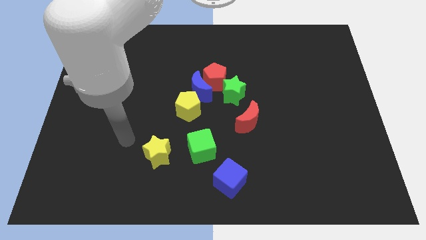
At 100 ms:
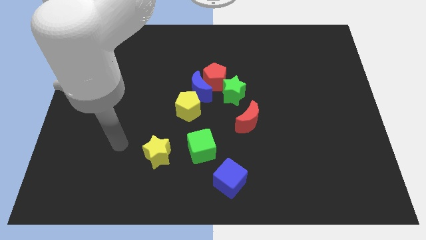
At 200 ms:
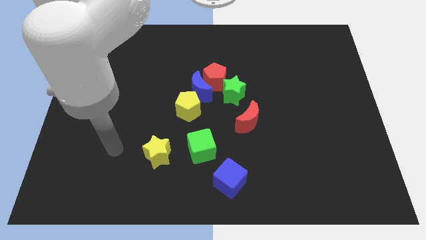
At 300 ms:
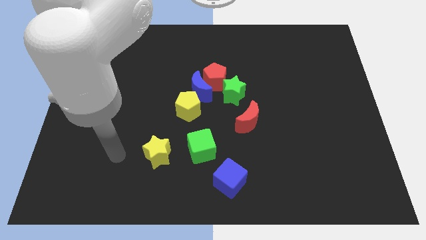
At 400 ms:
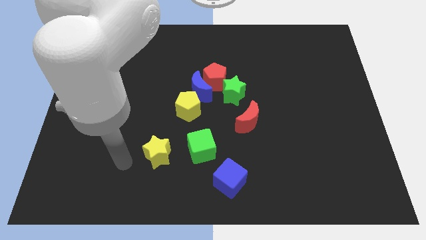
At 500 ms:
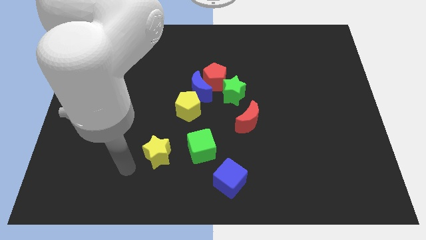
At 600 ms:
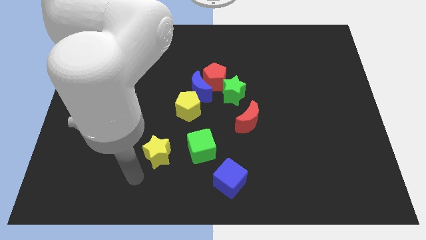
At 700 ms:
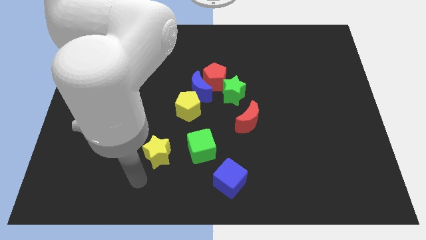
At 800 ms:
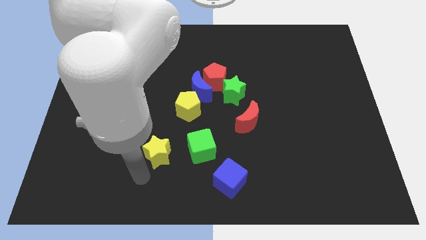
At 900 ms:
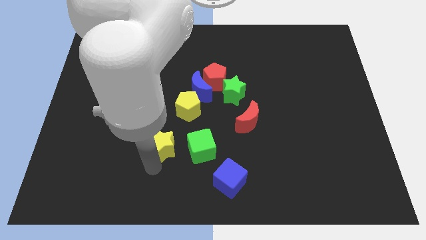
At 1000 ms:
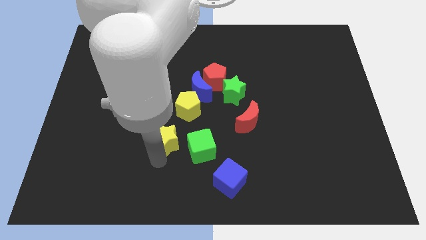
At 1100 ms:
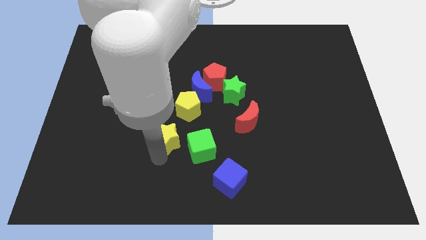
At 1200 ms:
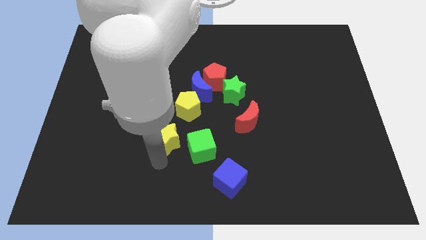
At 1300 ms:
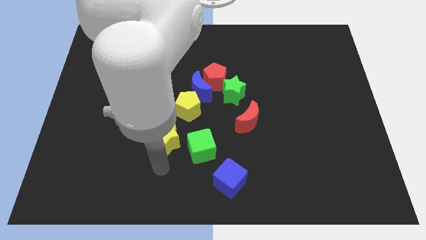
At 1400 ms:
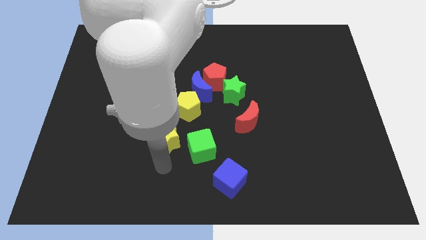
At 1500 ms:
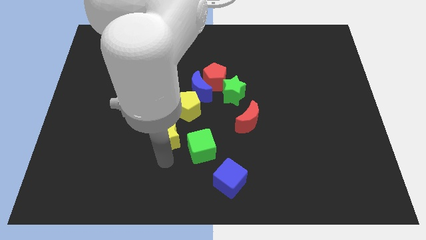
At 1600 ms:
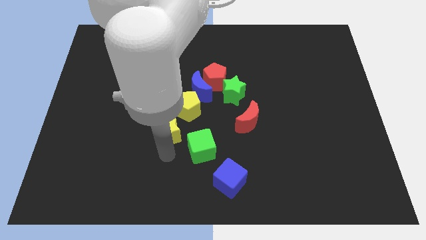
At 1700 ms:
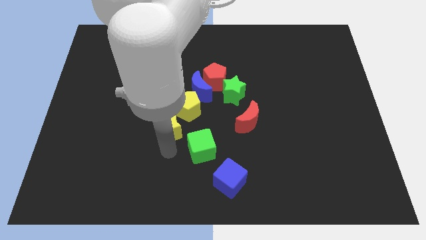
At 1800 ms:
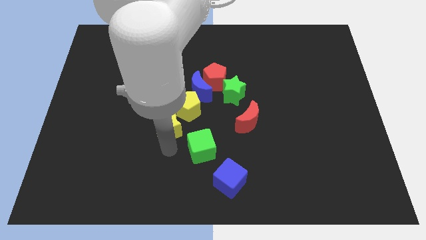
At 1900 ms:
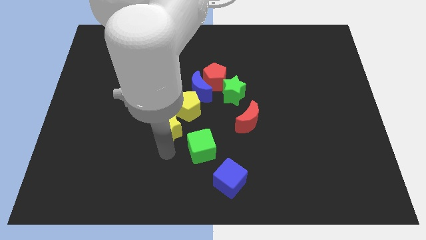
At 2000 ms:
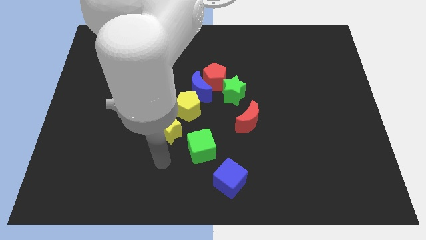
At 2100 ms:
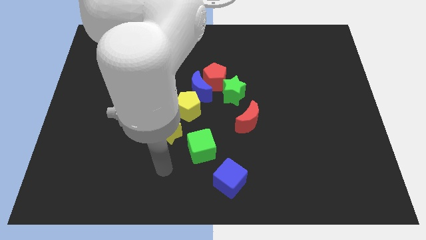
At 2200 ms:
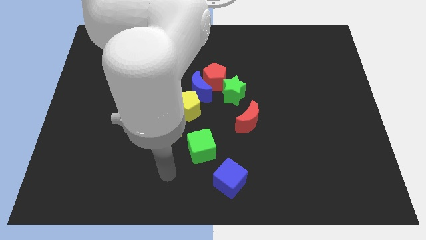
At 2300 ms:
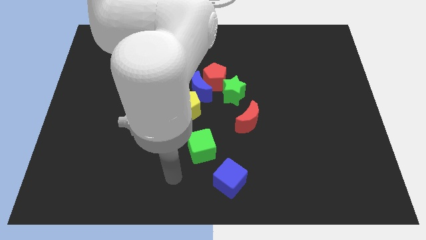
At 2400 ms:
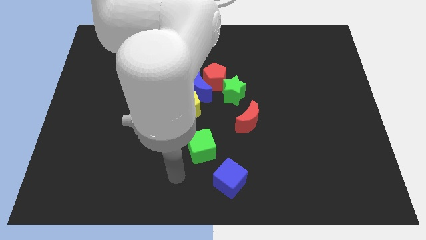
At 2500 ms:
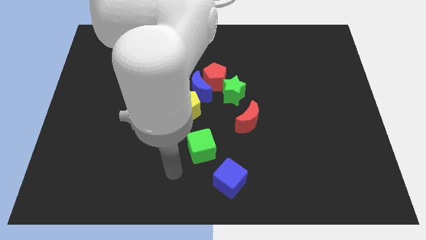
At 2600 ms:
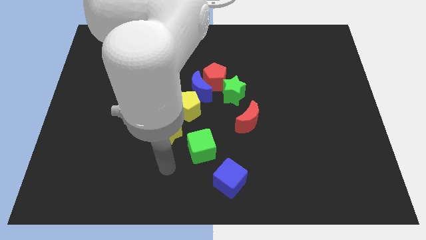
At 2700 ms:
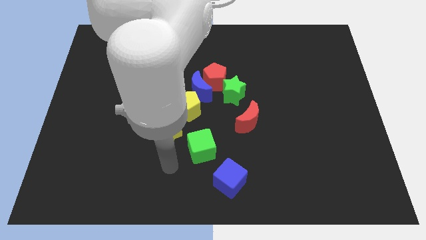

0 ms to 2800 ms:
move the yellow star below the yellow pentagon

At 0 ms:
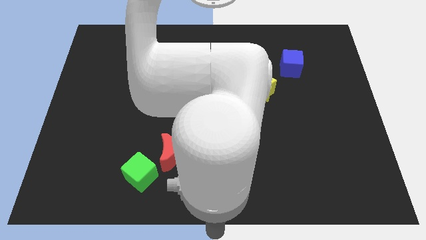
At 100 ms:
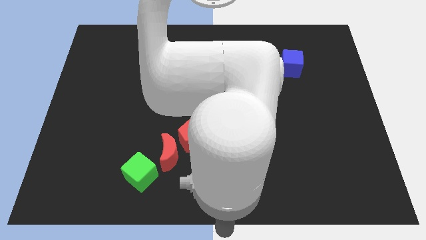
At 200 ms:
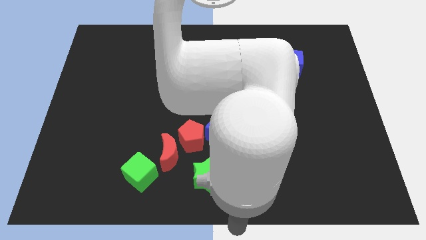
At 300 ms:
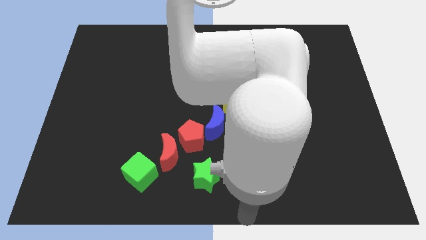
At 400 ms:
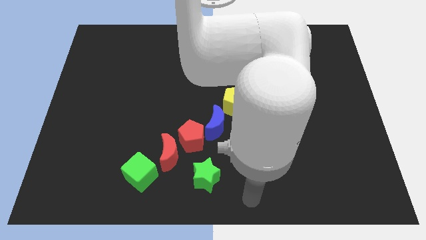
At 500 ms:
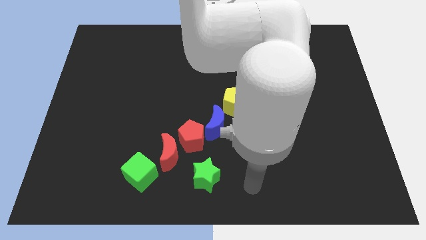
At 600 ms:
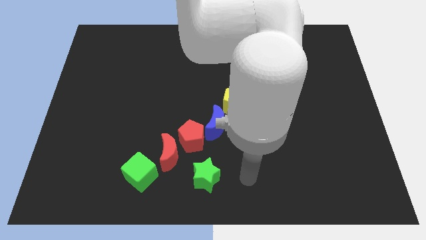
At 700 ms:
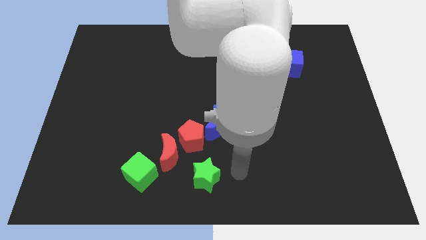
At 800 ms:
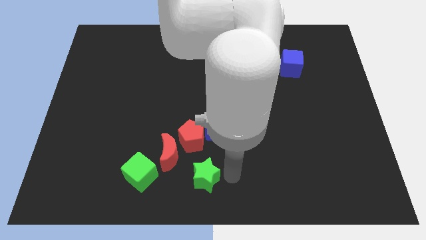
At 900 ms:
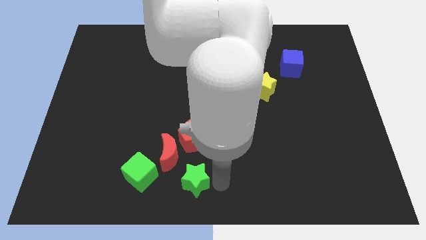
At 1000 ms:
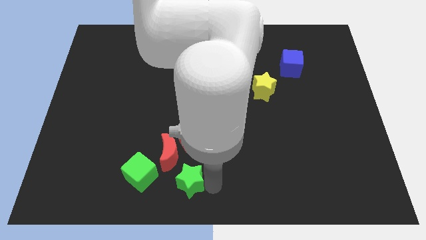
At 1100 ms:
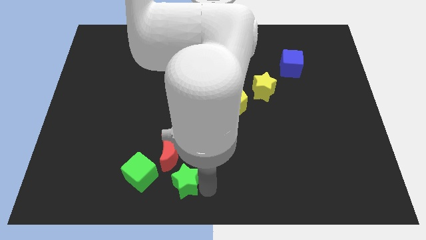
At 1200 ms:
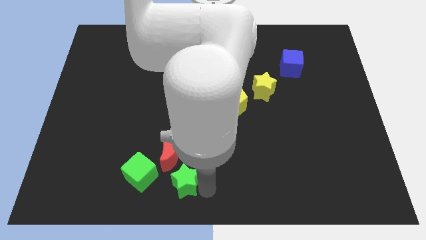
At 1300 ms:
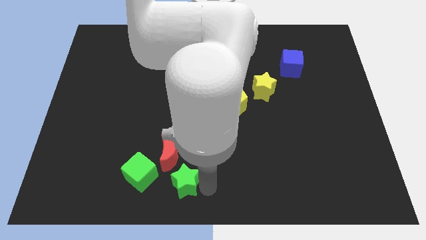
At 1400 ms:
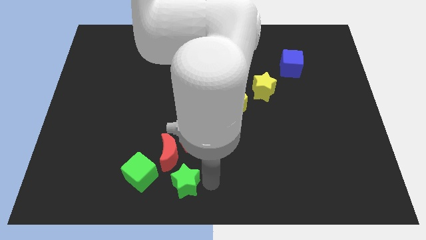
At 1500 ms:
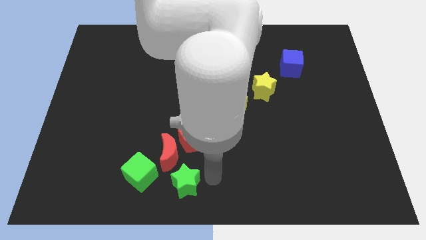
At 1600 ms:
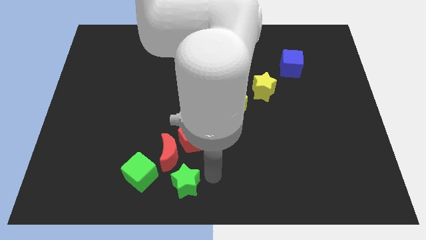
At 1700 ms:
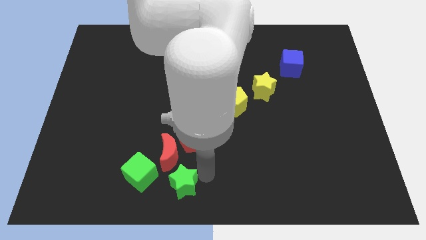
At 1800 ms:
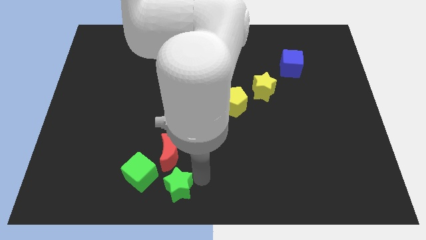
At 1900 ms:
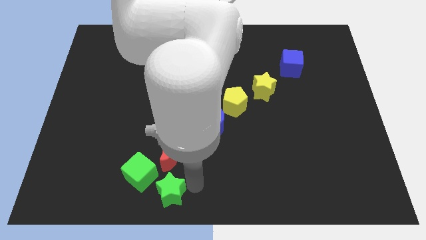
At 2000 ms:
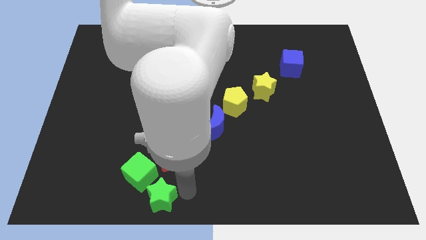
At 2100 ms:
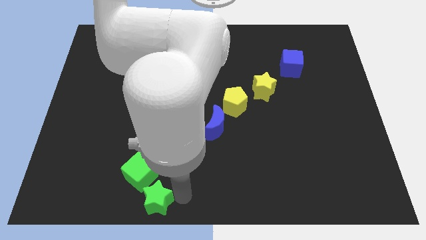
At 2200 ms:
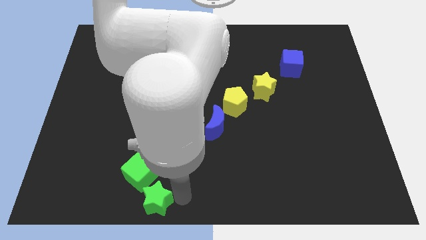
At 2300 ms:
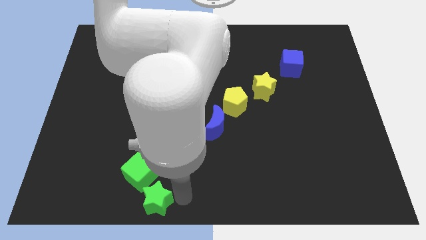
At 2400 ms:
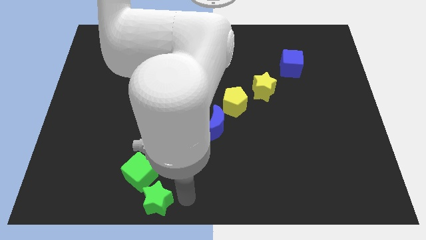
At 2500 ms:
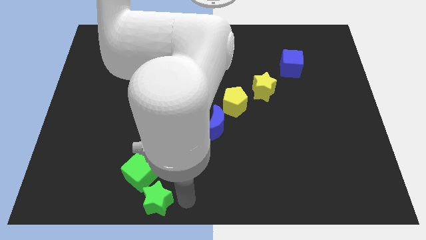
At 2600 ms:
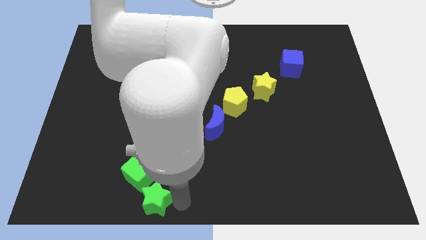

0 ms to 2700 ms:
push the green star to the bottom right of the green cube

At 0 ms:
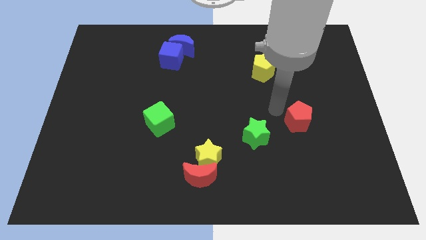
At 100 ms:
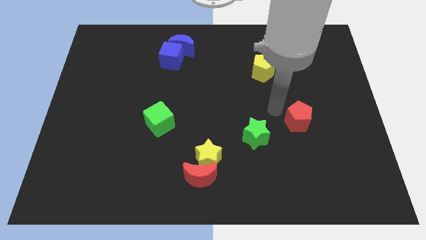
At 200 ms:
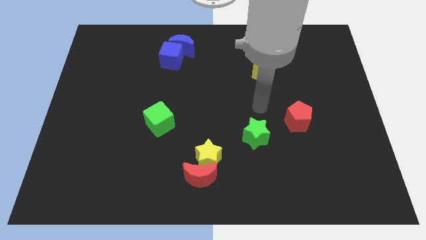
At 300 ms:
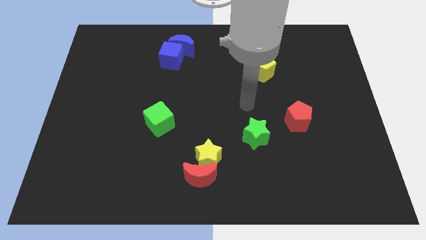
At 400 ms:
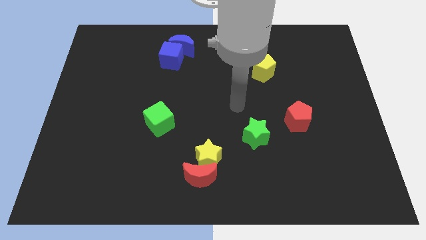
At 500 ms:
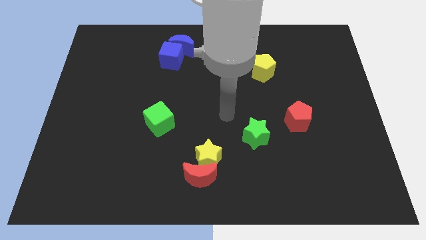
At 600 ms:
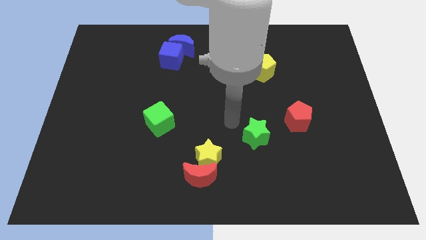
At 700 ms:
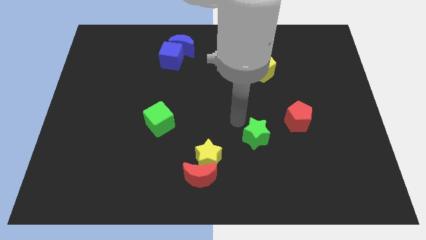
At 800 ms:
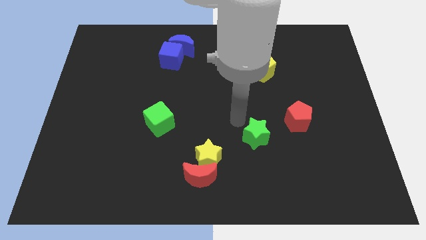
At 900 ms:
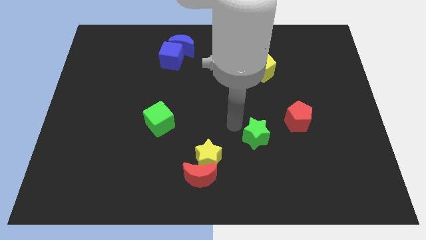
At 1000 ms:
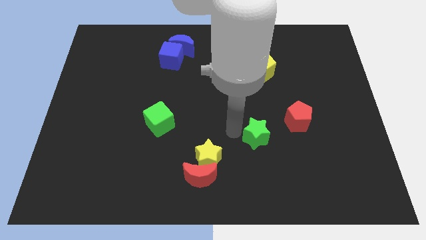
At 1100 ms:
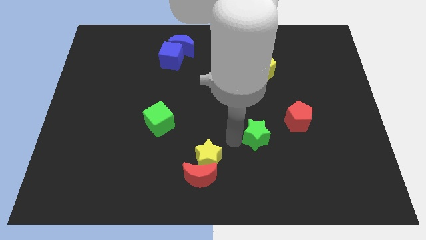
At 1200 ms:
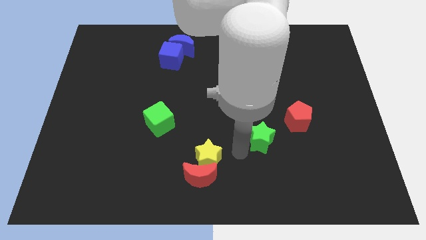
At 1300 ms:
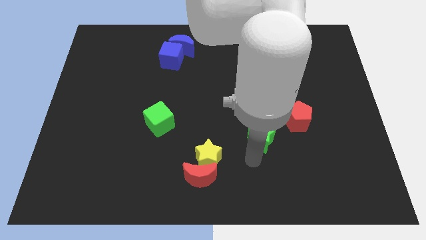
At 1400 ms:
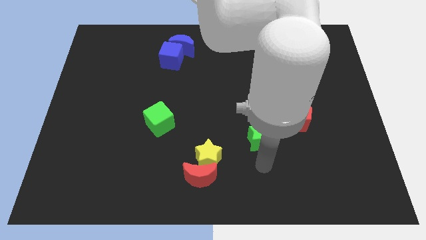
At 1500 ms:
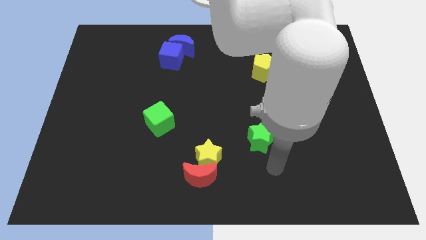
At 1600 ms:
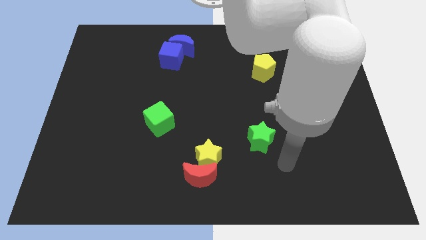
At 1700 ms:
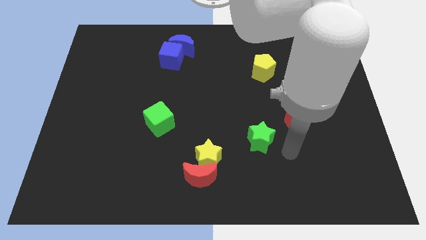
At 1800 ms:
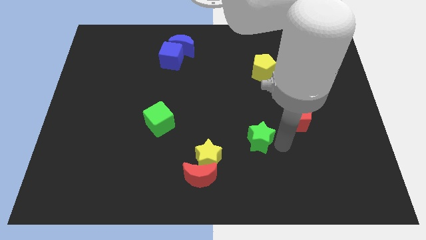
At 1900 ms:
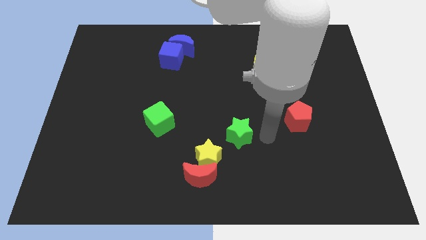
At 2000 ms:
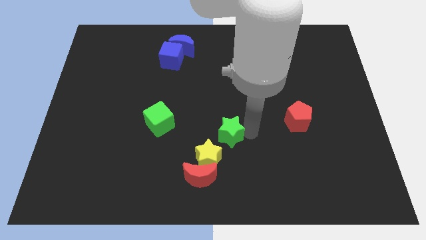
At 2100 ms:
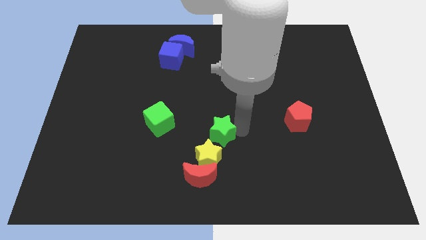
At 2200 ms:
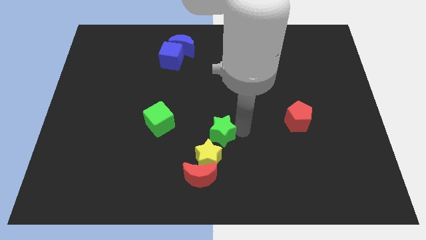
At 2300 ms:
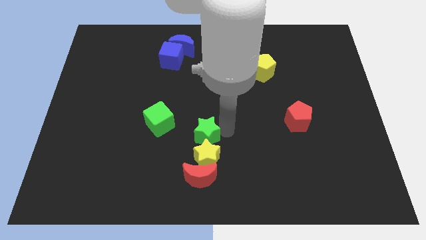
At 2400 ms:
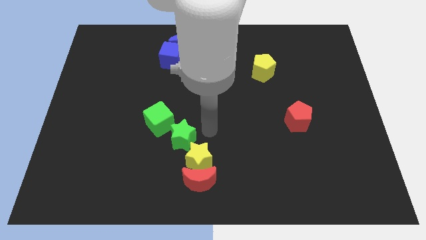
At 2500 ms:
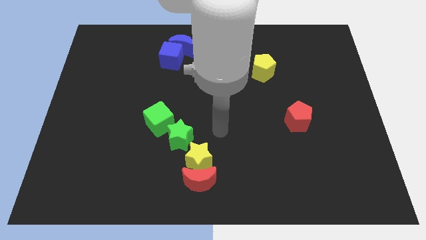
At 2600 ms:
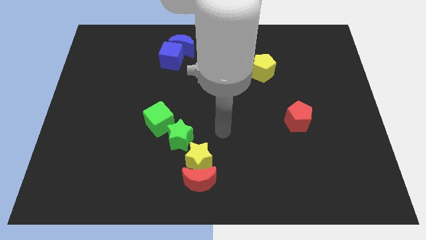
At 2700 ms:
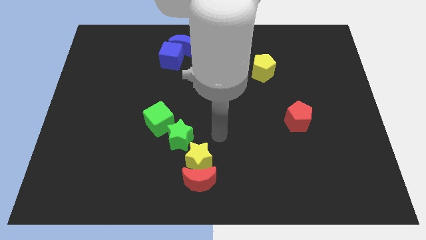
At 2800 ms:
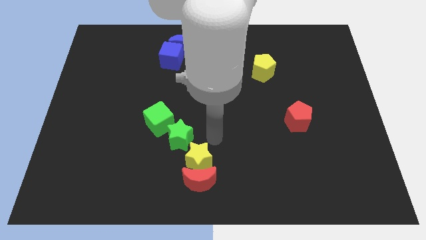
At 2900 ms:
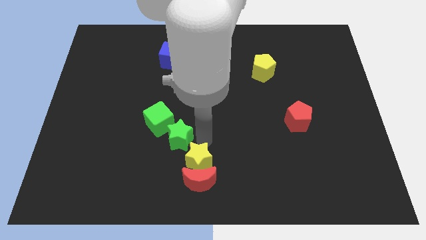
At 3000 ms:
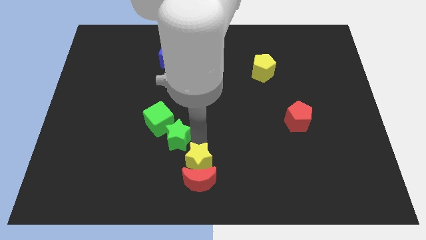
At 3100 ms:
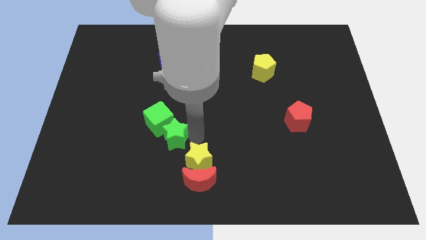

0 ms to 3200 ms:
place the green star in between green cube and yellow star

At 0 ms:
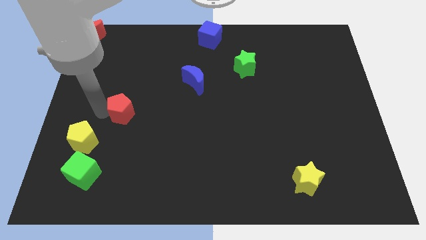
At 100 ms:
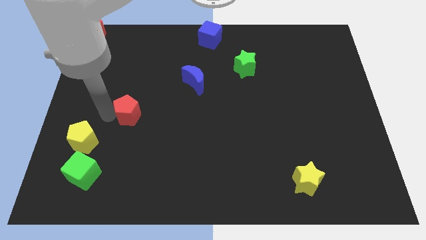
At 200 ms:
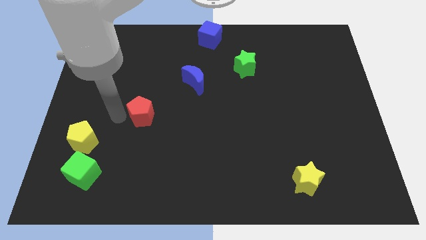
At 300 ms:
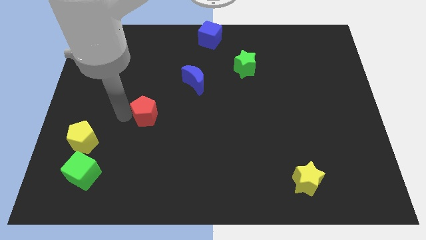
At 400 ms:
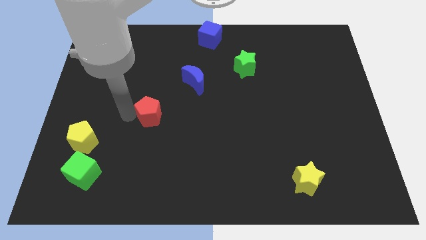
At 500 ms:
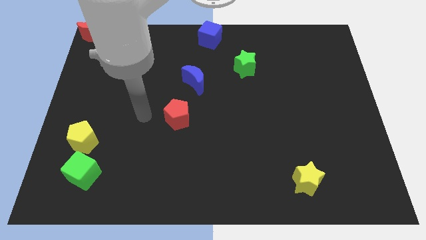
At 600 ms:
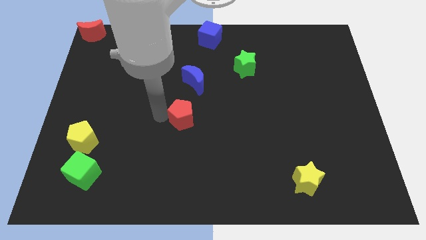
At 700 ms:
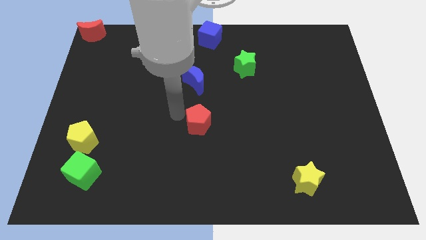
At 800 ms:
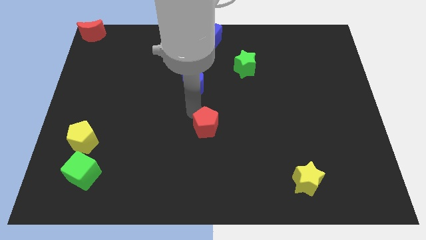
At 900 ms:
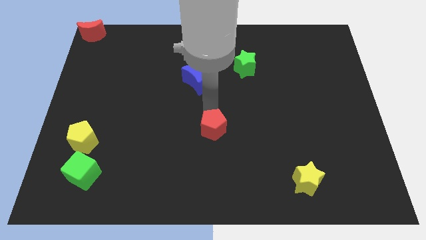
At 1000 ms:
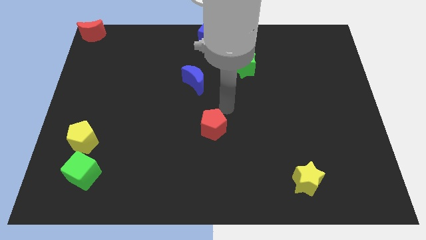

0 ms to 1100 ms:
place the red pentagon vertically below the blue cube
